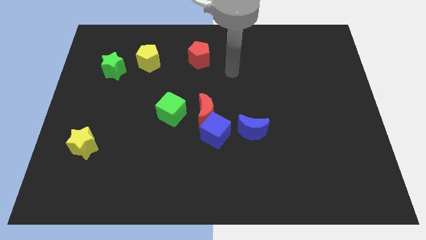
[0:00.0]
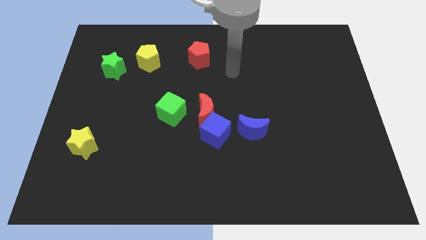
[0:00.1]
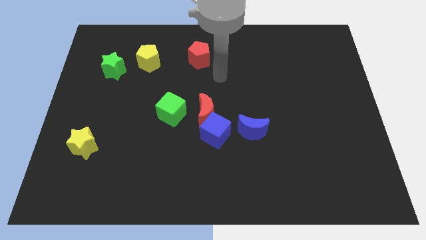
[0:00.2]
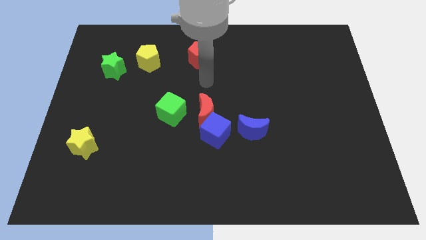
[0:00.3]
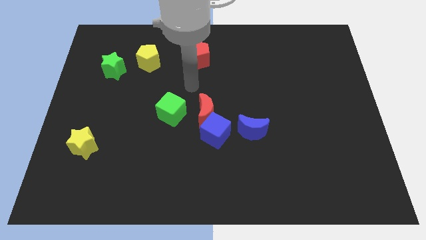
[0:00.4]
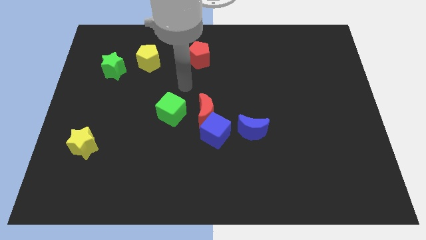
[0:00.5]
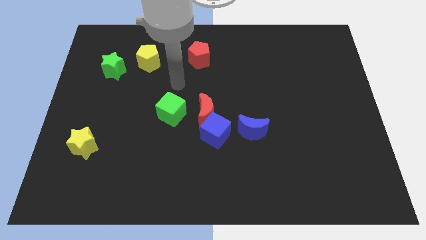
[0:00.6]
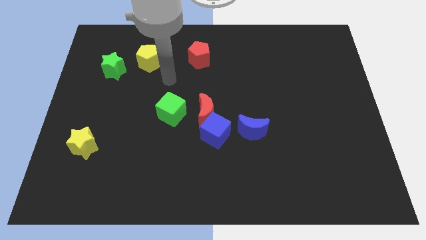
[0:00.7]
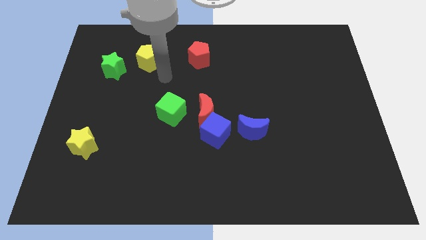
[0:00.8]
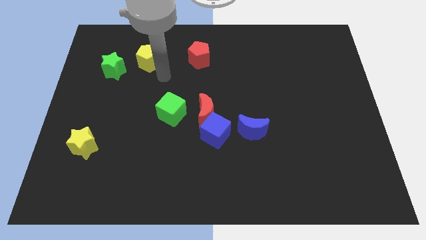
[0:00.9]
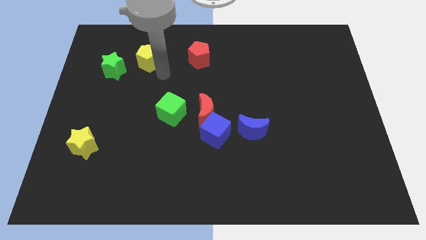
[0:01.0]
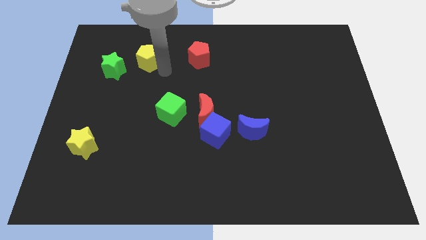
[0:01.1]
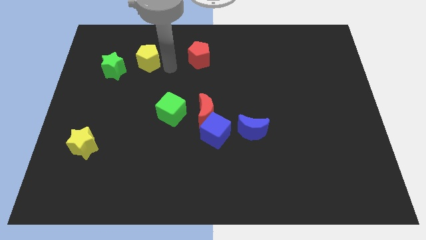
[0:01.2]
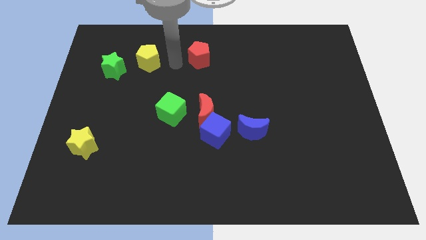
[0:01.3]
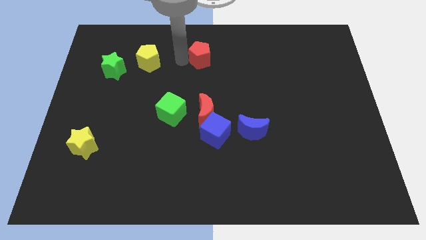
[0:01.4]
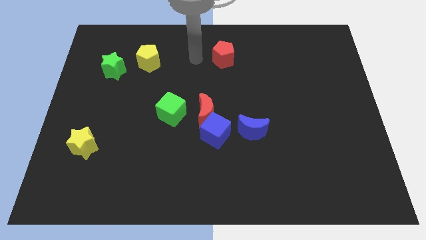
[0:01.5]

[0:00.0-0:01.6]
push the red pentagon slightly towards the right side

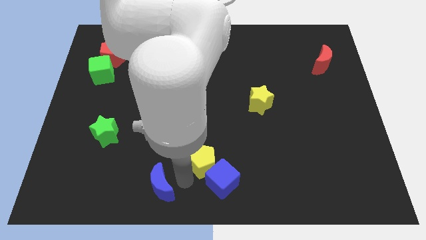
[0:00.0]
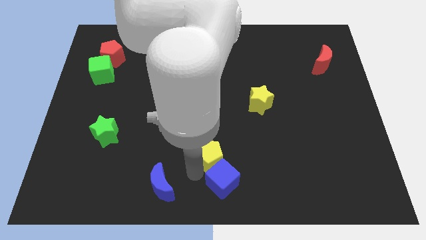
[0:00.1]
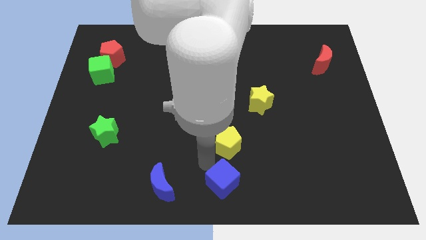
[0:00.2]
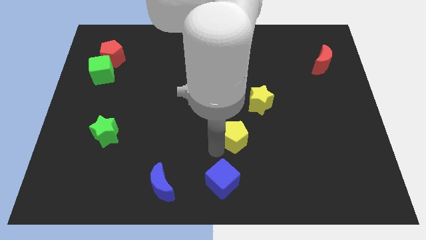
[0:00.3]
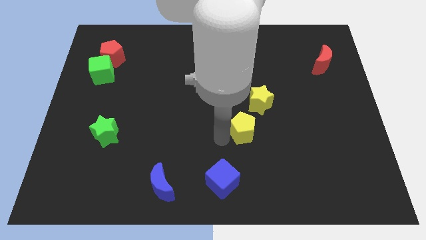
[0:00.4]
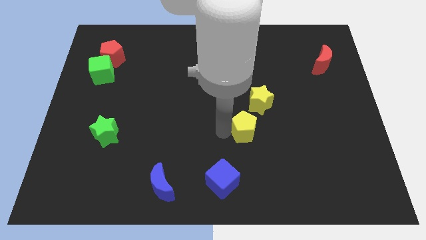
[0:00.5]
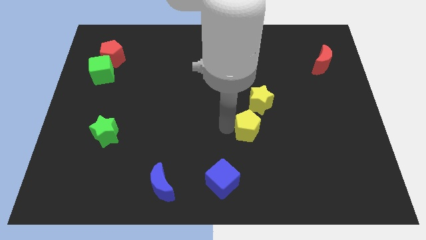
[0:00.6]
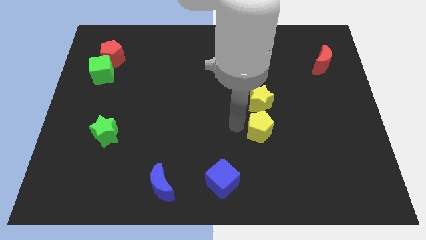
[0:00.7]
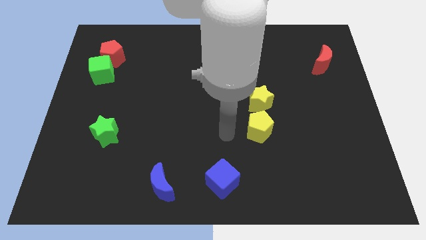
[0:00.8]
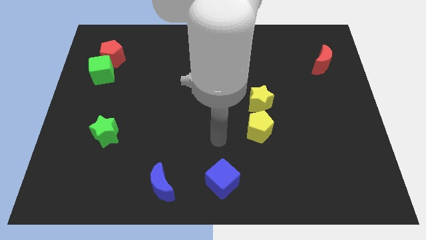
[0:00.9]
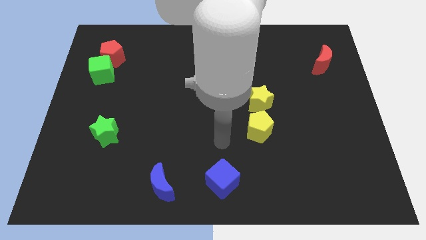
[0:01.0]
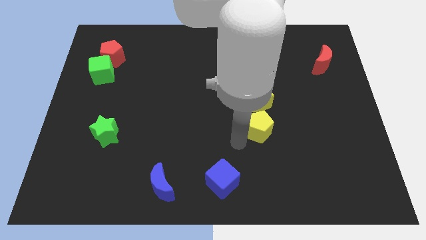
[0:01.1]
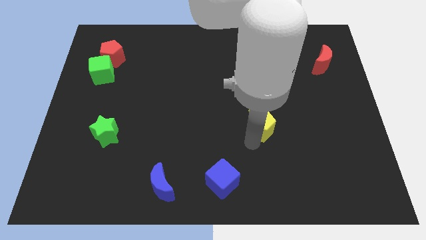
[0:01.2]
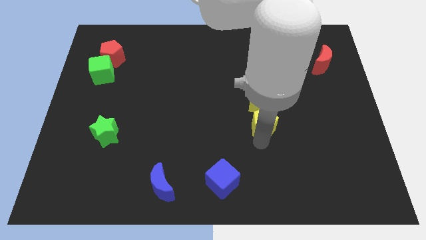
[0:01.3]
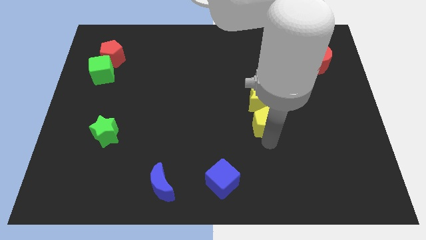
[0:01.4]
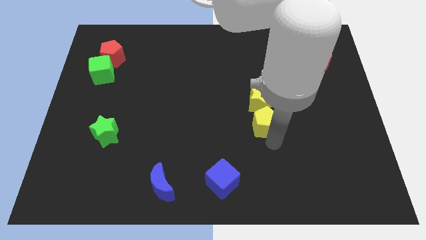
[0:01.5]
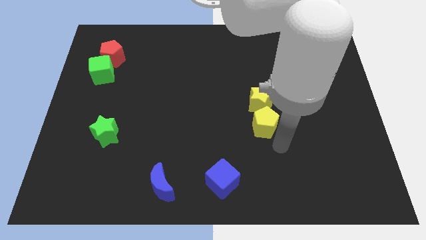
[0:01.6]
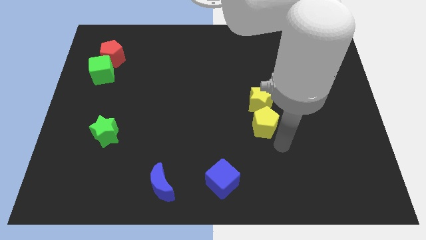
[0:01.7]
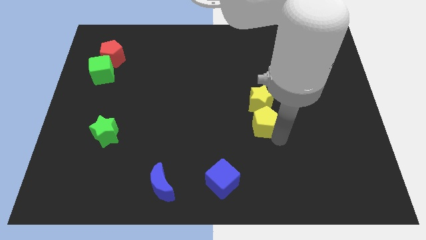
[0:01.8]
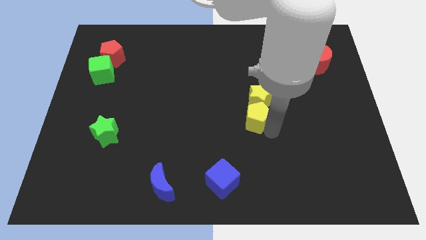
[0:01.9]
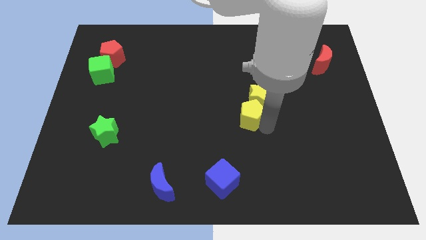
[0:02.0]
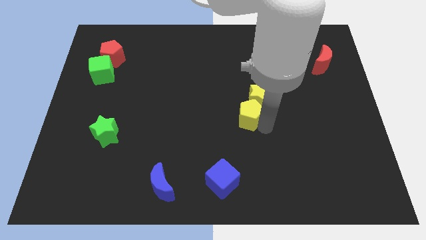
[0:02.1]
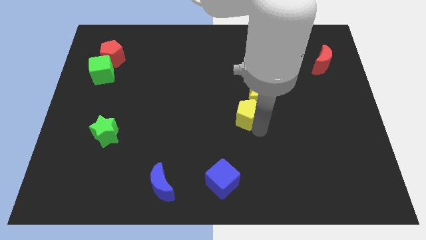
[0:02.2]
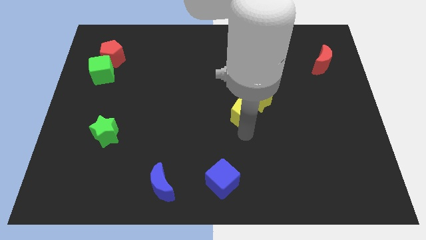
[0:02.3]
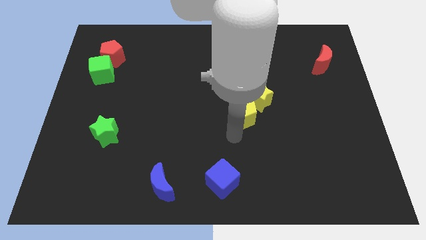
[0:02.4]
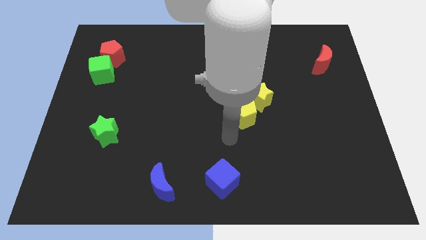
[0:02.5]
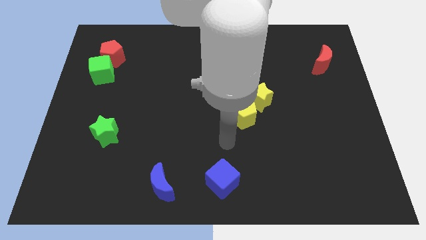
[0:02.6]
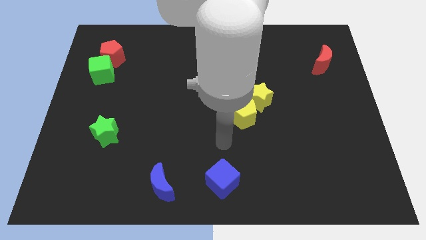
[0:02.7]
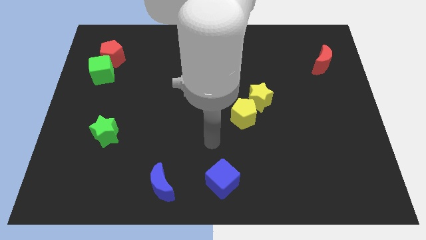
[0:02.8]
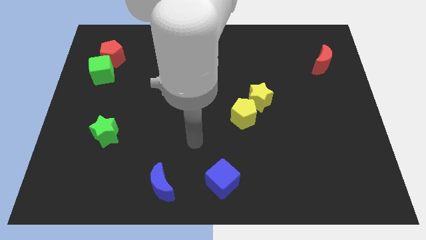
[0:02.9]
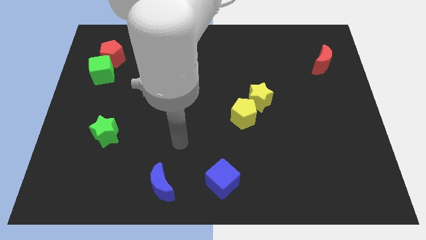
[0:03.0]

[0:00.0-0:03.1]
move yellow pentagon to the center

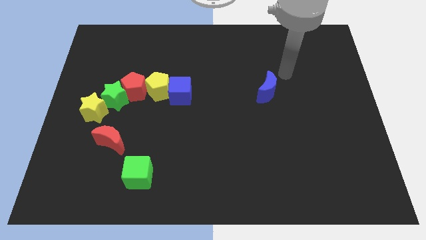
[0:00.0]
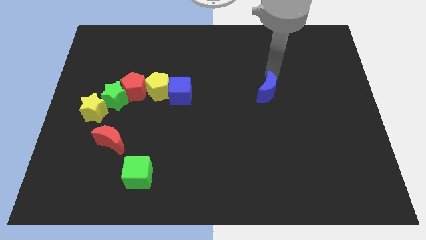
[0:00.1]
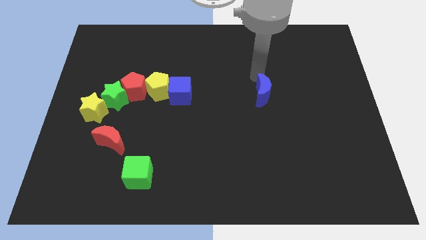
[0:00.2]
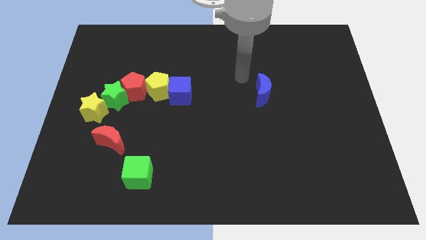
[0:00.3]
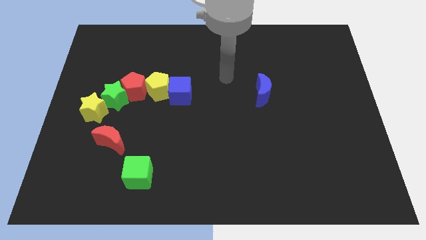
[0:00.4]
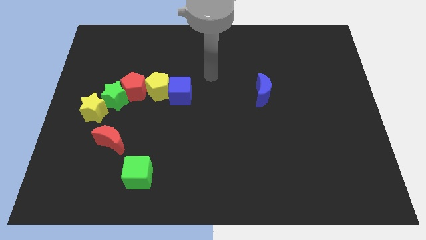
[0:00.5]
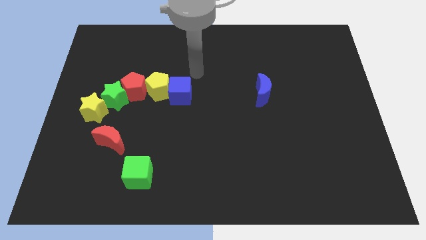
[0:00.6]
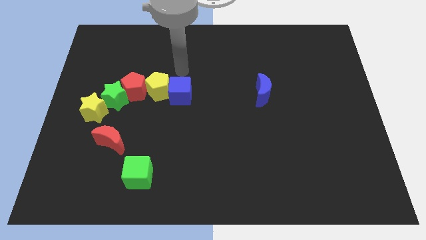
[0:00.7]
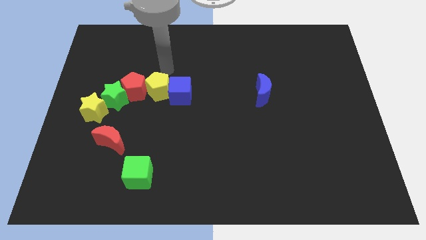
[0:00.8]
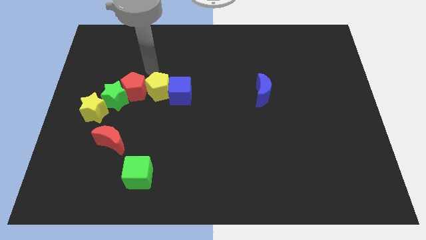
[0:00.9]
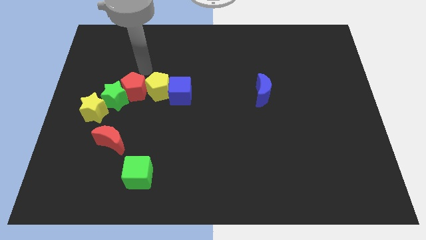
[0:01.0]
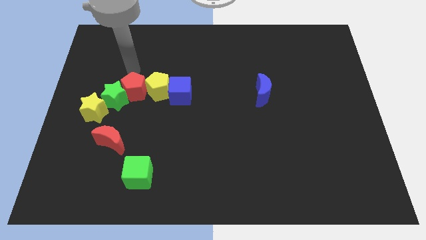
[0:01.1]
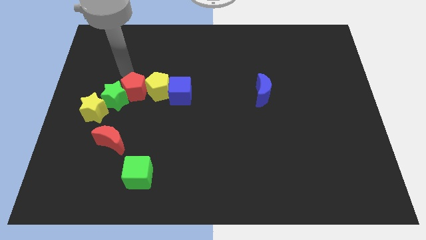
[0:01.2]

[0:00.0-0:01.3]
move your arm to the top of red pentagon

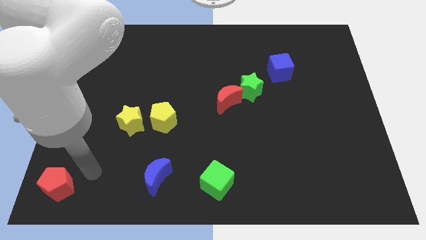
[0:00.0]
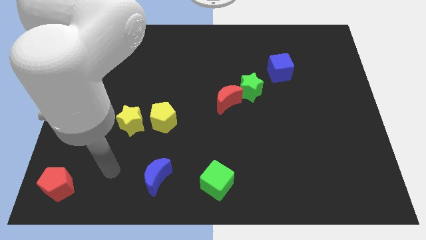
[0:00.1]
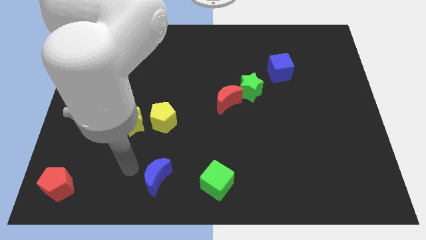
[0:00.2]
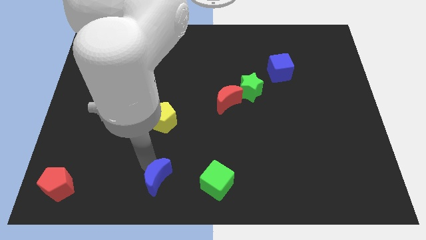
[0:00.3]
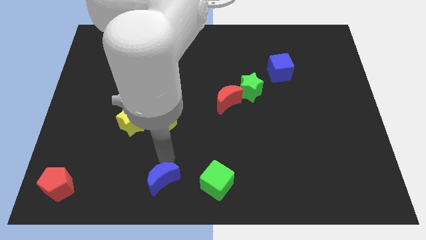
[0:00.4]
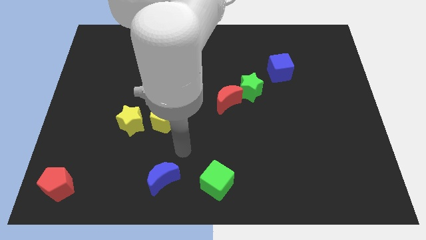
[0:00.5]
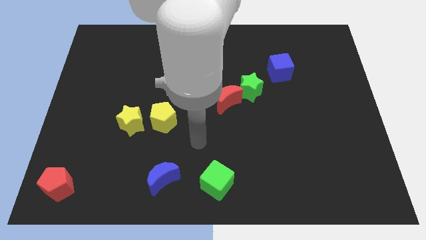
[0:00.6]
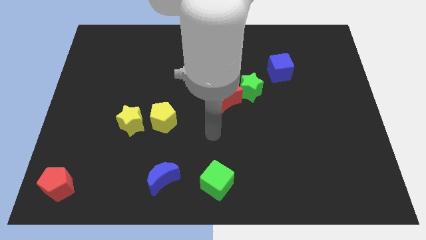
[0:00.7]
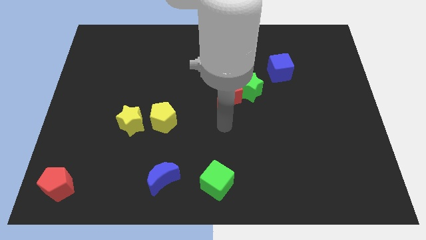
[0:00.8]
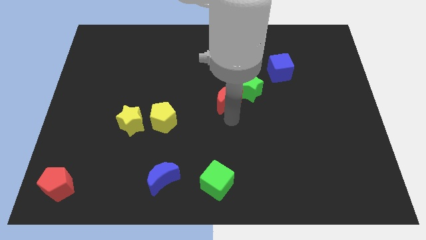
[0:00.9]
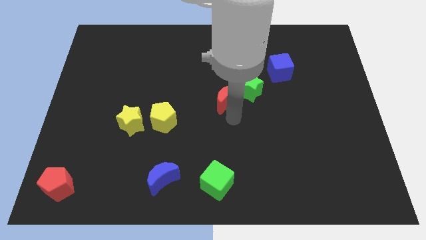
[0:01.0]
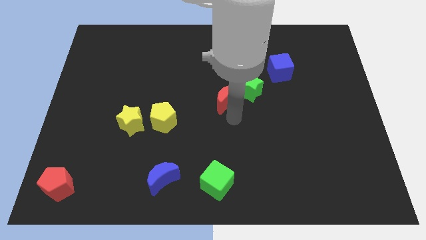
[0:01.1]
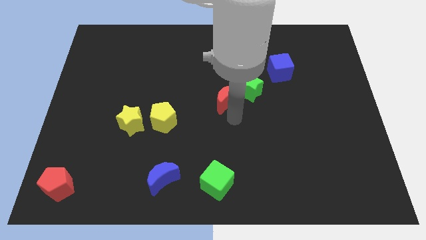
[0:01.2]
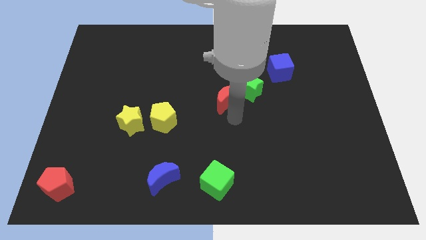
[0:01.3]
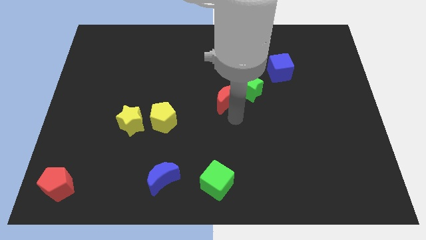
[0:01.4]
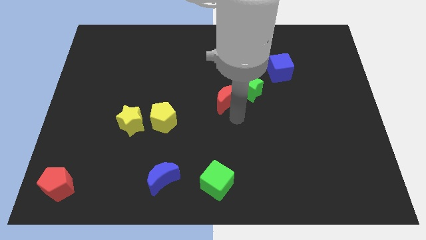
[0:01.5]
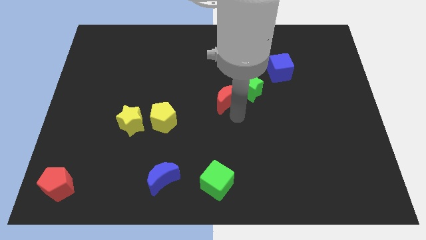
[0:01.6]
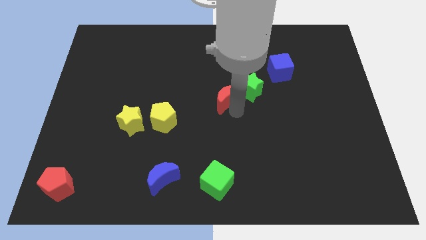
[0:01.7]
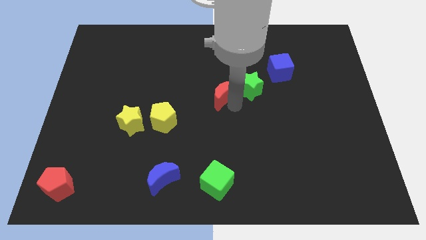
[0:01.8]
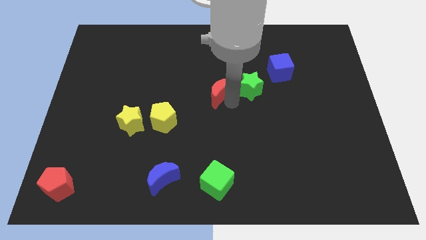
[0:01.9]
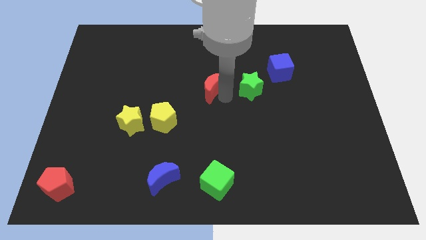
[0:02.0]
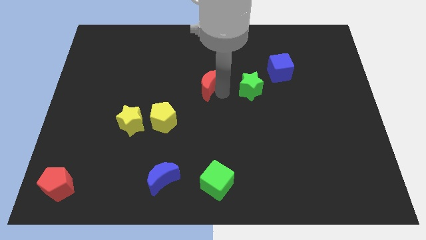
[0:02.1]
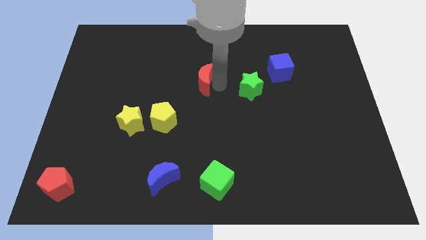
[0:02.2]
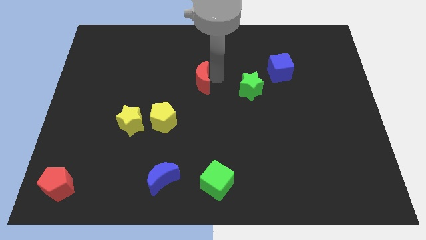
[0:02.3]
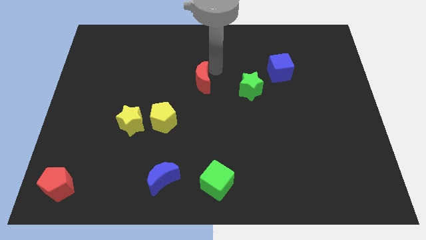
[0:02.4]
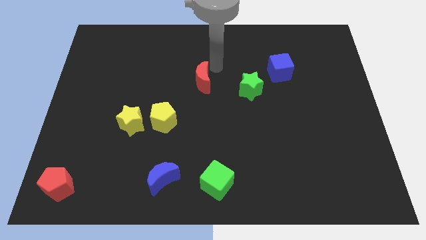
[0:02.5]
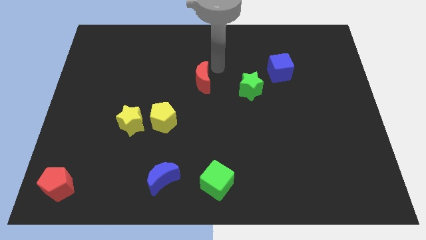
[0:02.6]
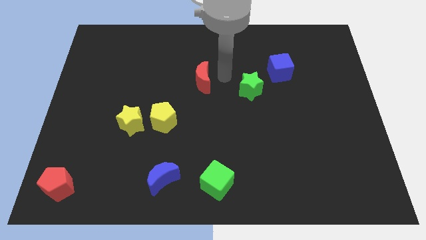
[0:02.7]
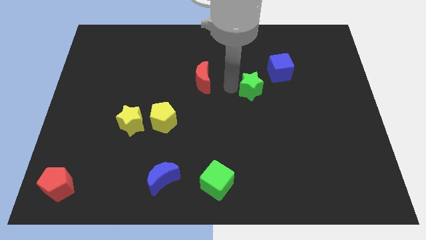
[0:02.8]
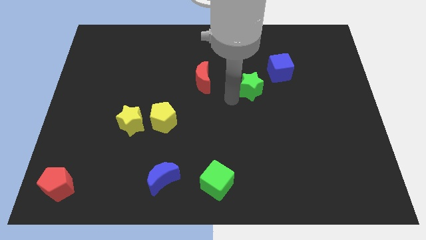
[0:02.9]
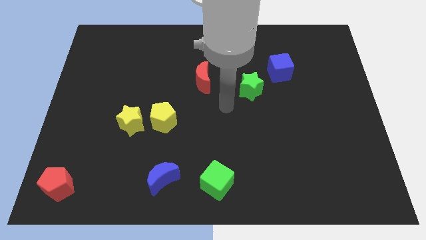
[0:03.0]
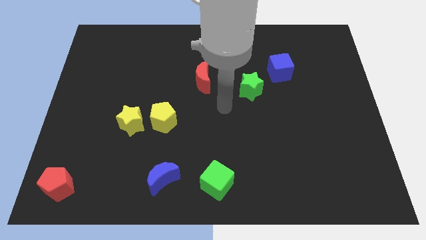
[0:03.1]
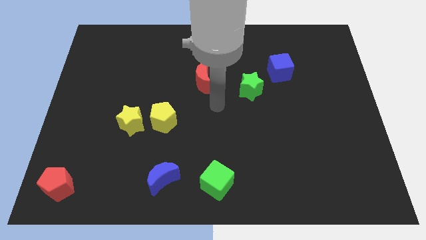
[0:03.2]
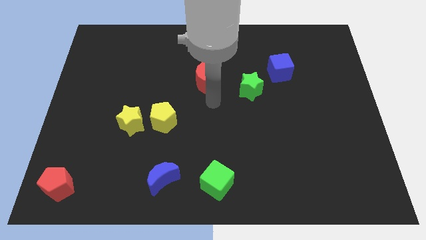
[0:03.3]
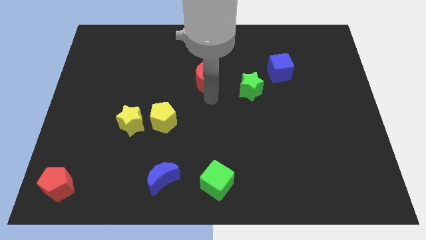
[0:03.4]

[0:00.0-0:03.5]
move the red moon away from the green star
